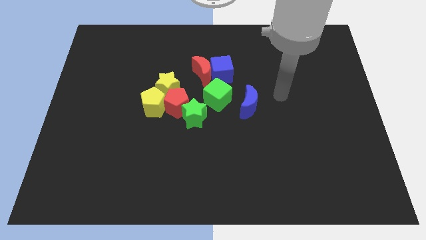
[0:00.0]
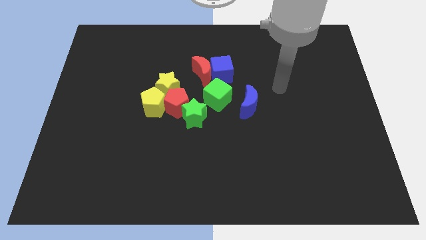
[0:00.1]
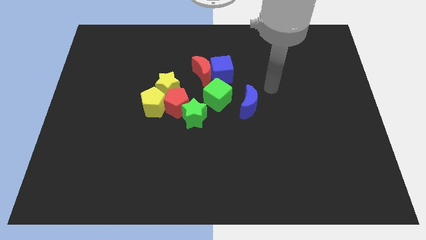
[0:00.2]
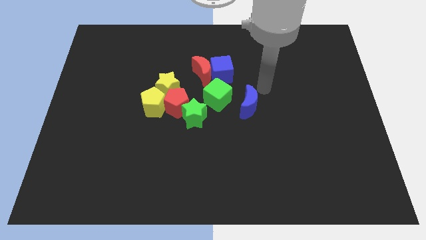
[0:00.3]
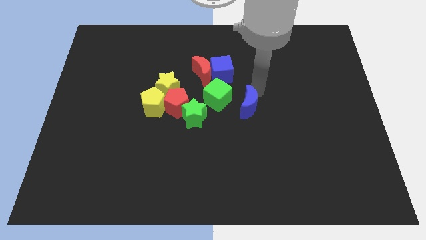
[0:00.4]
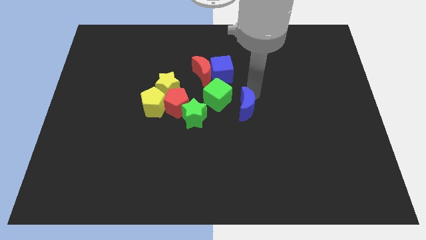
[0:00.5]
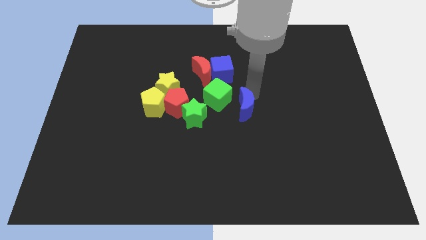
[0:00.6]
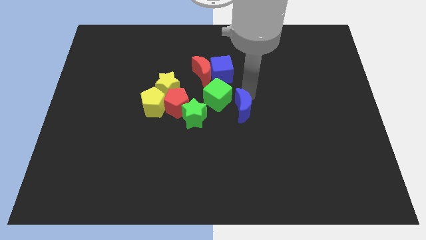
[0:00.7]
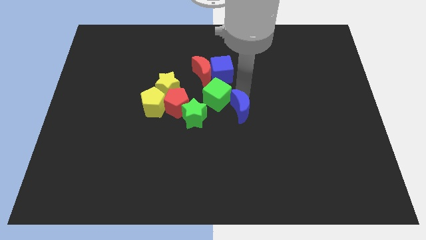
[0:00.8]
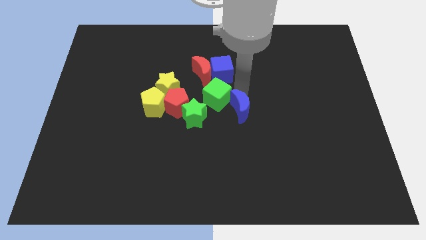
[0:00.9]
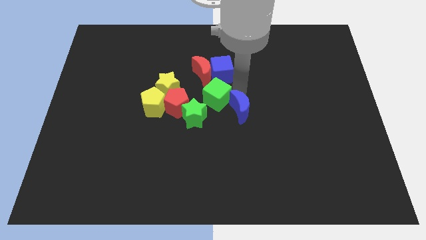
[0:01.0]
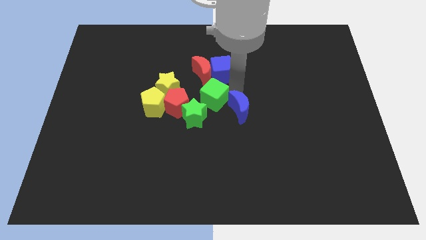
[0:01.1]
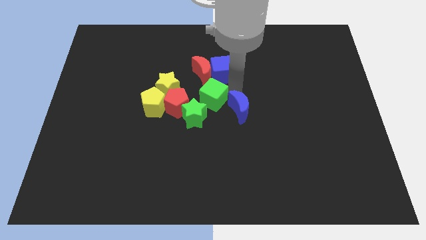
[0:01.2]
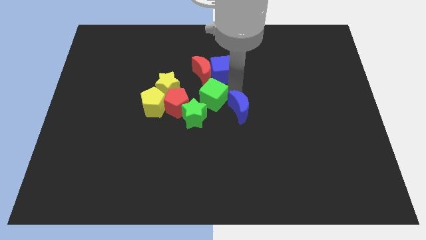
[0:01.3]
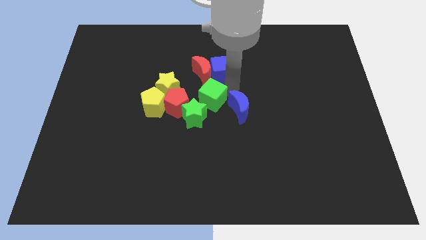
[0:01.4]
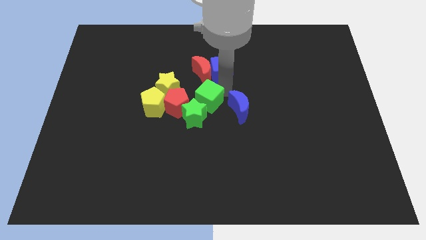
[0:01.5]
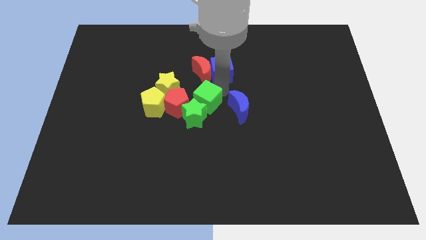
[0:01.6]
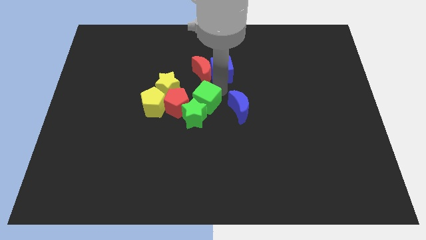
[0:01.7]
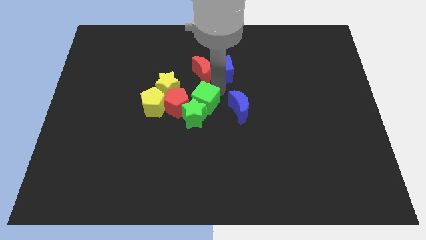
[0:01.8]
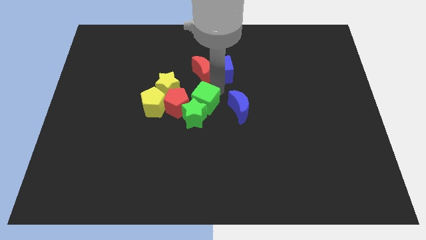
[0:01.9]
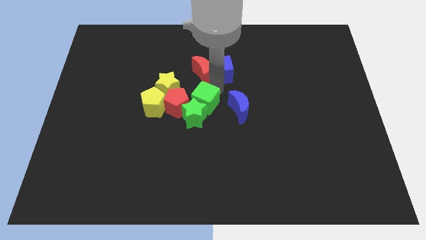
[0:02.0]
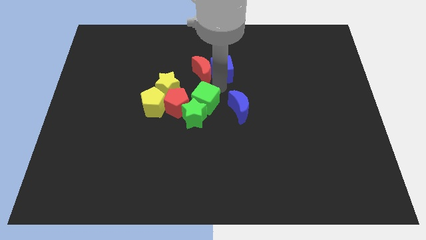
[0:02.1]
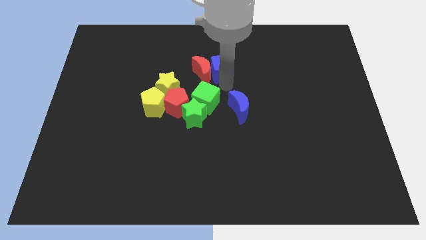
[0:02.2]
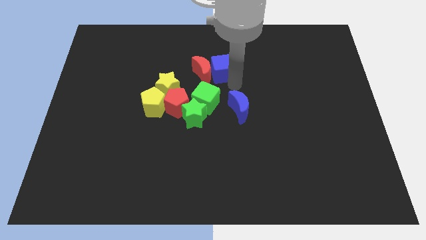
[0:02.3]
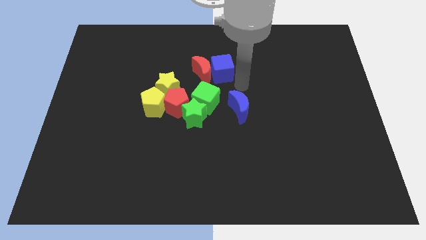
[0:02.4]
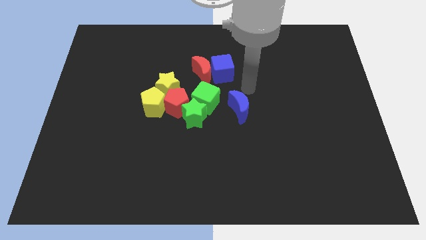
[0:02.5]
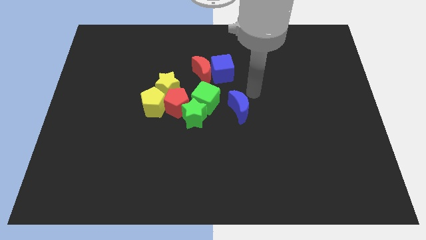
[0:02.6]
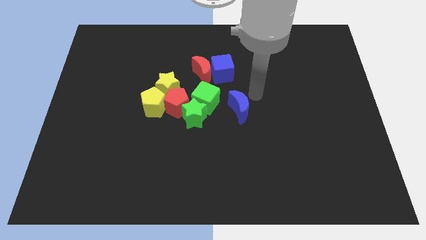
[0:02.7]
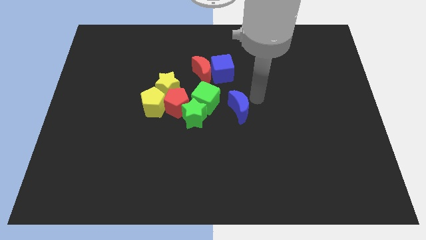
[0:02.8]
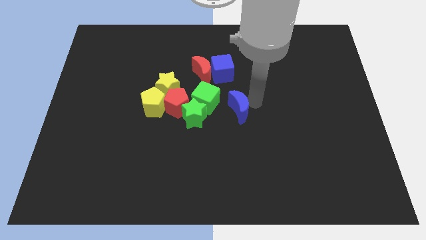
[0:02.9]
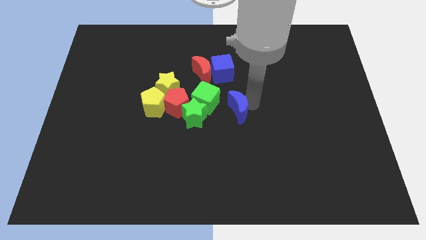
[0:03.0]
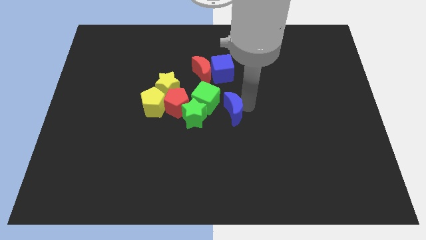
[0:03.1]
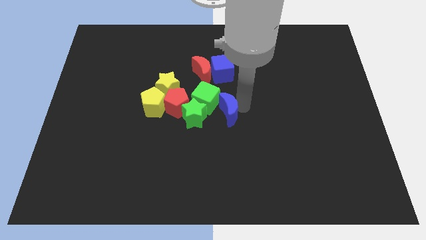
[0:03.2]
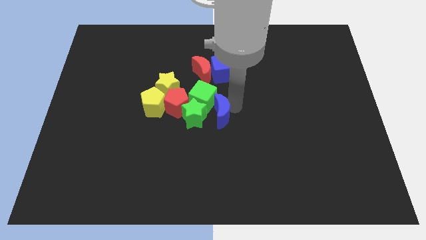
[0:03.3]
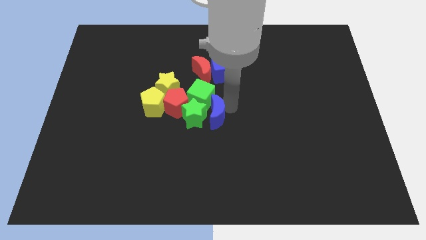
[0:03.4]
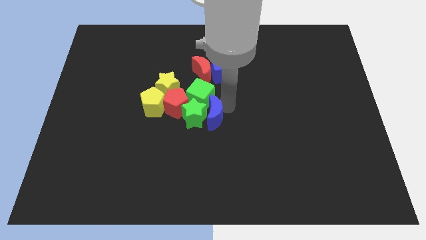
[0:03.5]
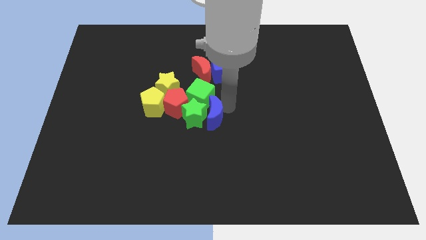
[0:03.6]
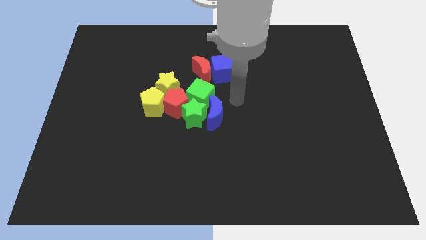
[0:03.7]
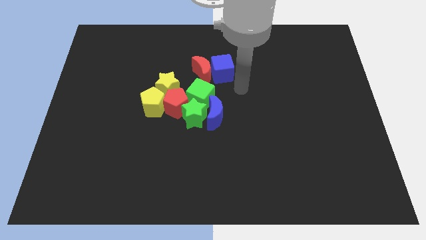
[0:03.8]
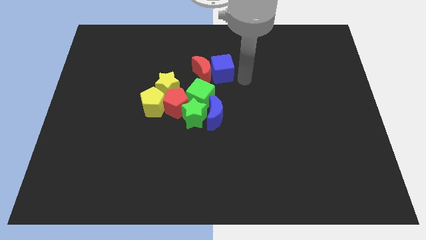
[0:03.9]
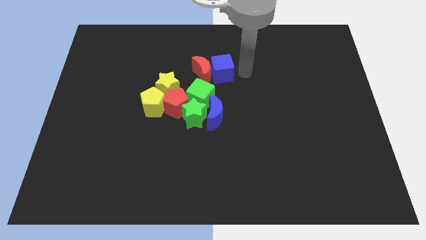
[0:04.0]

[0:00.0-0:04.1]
push the blue crescent and the green cube into the green star

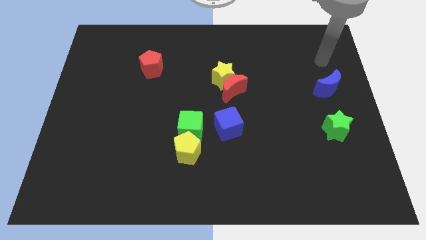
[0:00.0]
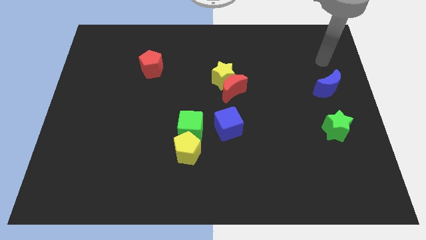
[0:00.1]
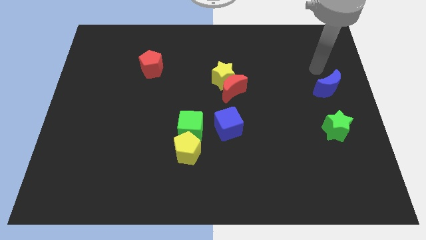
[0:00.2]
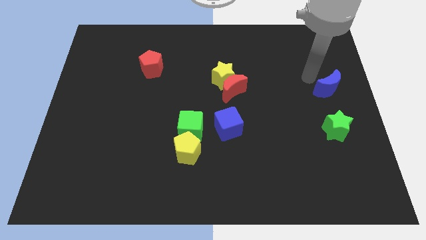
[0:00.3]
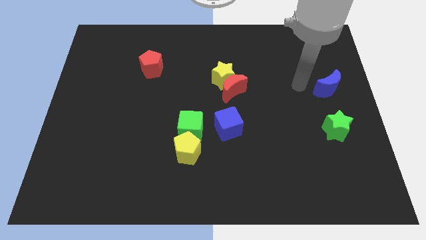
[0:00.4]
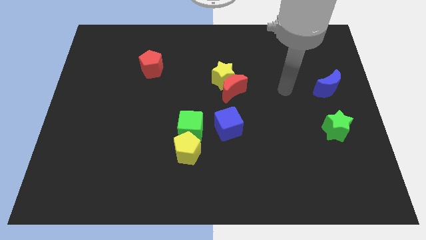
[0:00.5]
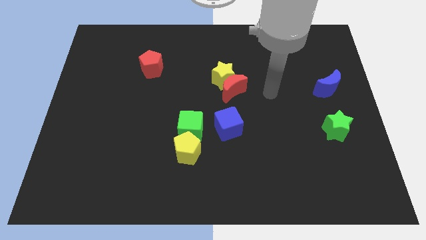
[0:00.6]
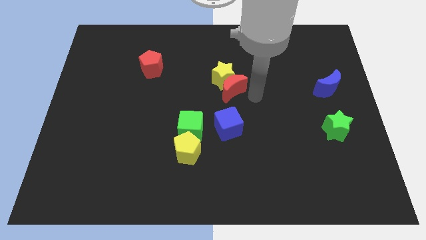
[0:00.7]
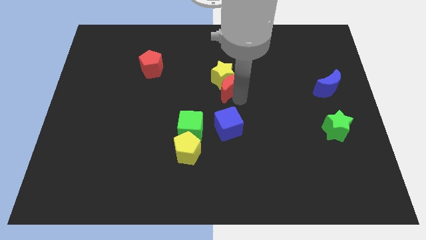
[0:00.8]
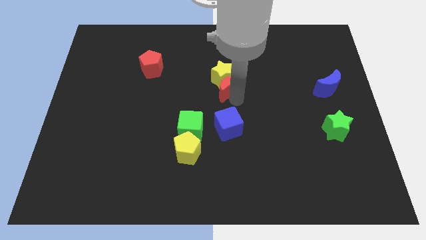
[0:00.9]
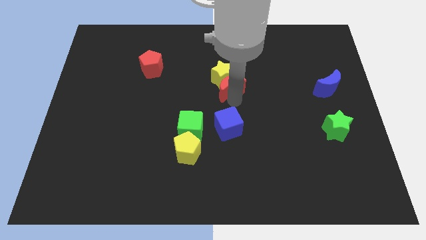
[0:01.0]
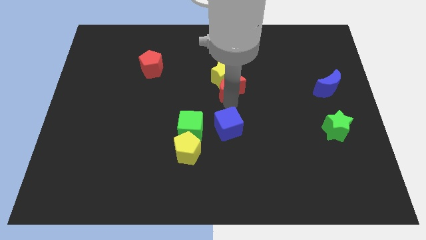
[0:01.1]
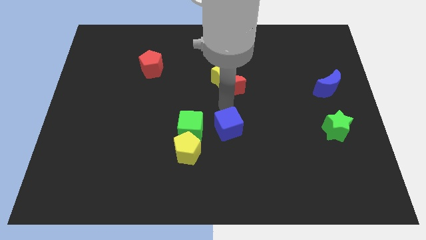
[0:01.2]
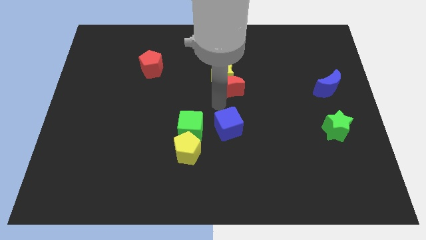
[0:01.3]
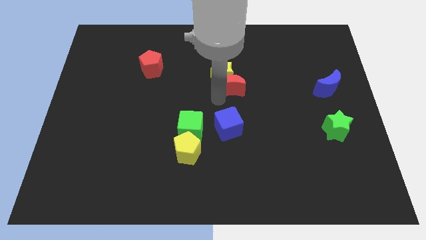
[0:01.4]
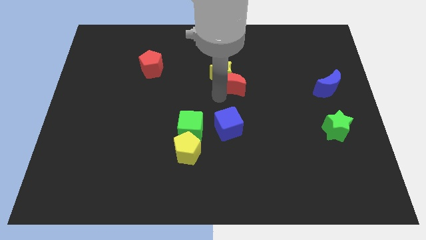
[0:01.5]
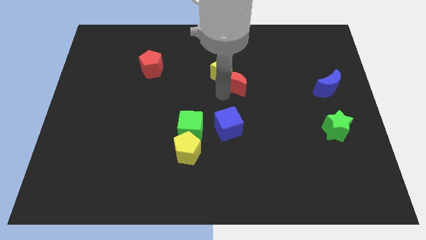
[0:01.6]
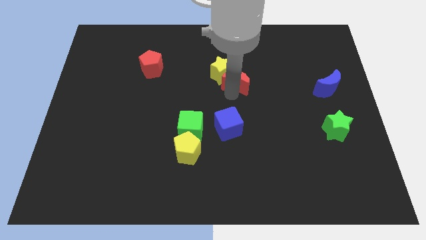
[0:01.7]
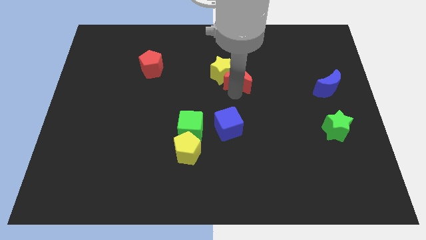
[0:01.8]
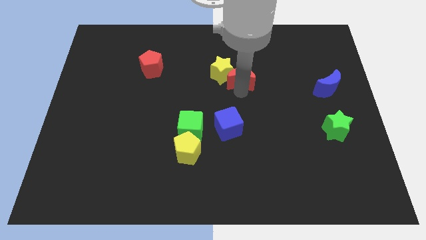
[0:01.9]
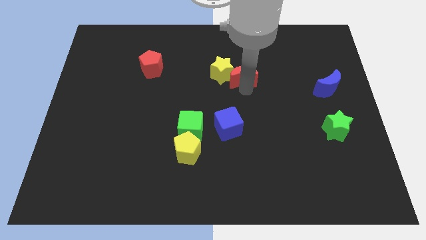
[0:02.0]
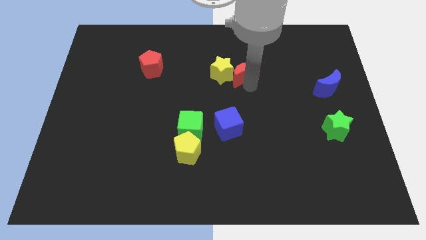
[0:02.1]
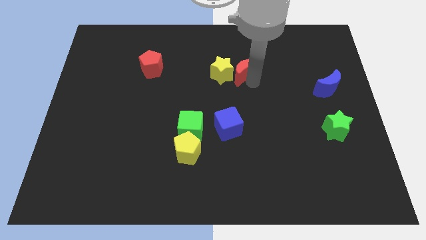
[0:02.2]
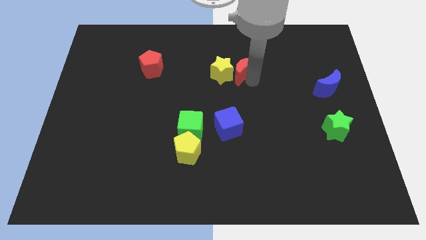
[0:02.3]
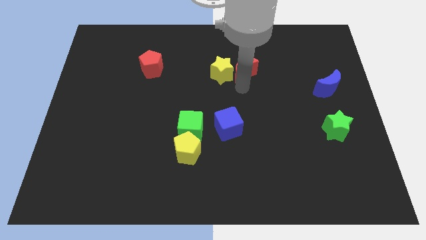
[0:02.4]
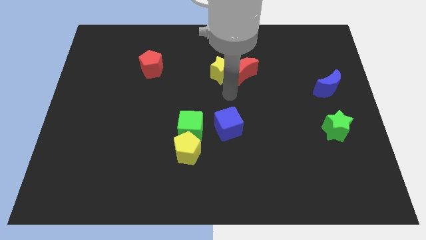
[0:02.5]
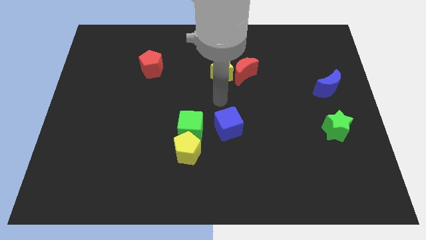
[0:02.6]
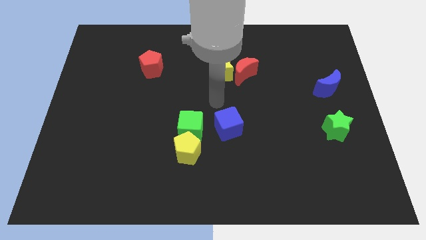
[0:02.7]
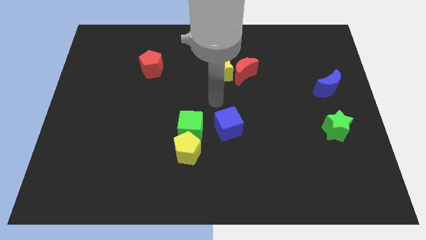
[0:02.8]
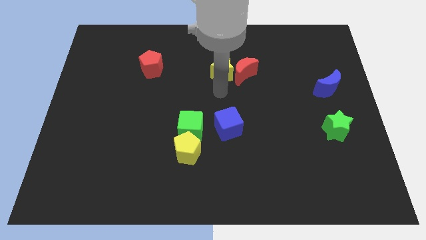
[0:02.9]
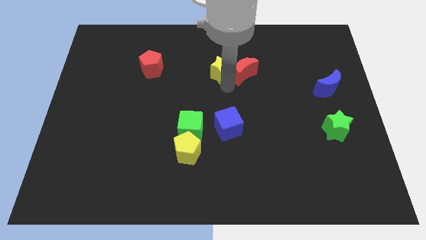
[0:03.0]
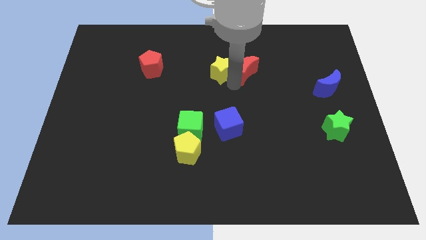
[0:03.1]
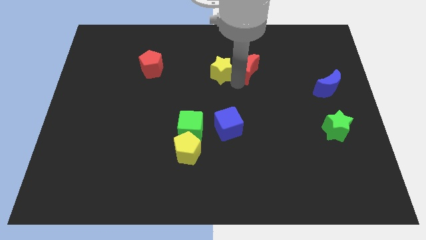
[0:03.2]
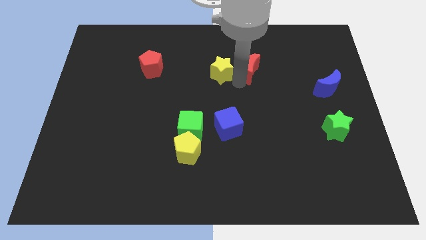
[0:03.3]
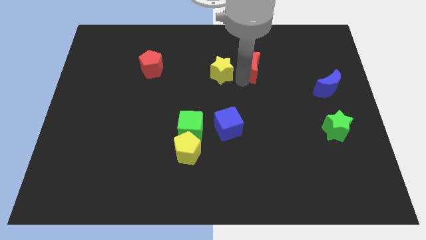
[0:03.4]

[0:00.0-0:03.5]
push the red crescent to the right of the yellow star

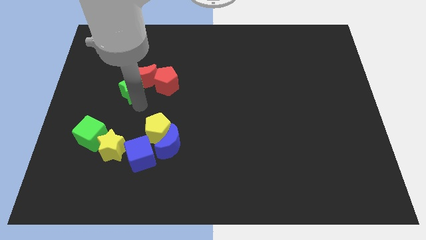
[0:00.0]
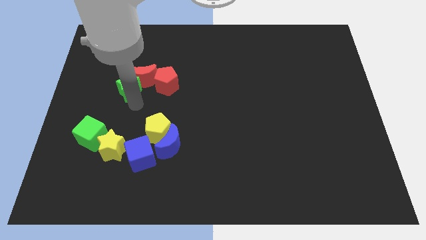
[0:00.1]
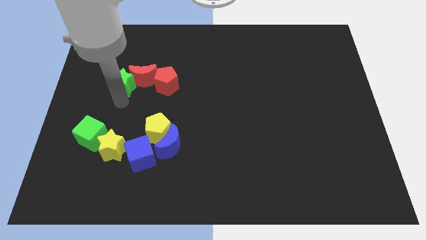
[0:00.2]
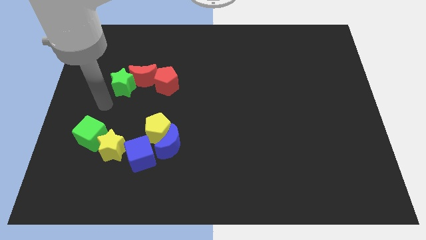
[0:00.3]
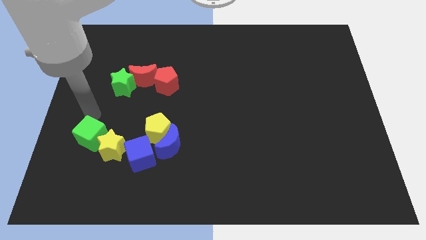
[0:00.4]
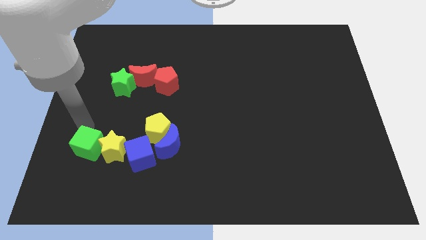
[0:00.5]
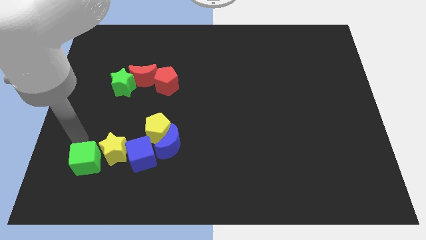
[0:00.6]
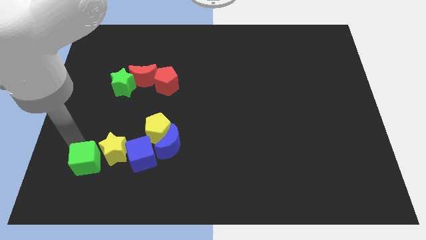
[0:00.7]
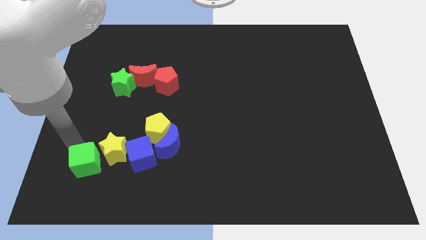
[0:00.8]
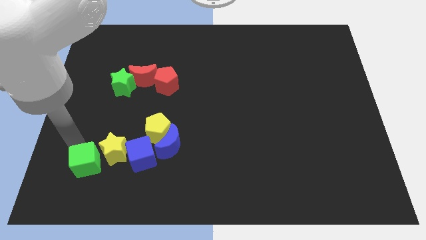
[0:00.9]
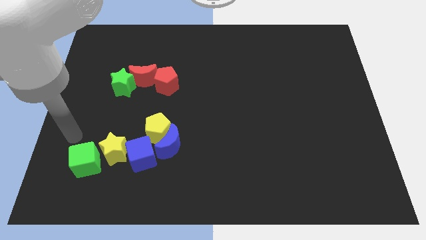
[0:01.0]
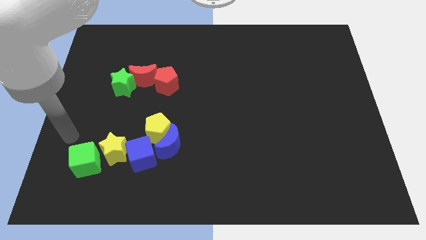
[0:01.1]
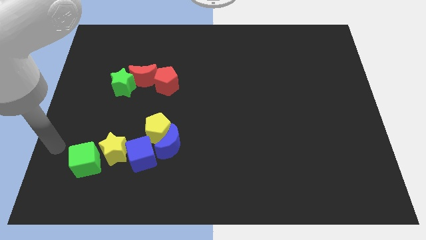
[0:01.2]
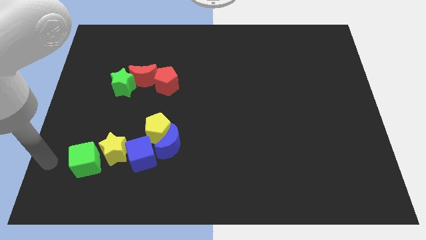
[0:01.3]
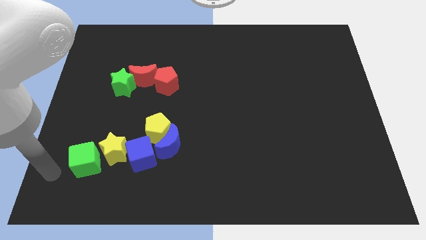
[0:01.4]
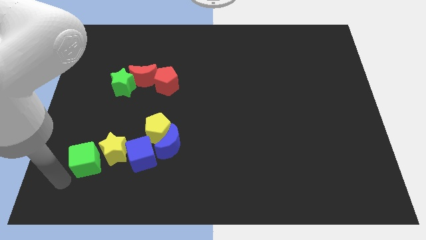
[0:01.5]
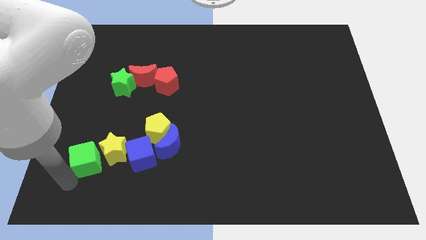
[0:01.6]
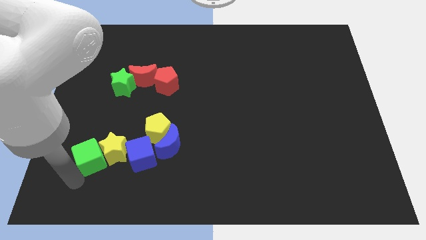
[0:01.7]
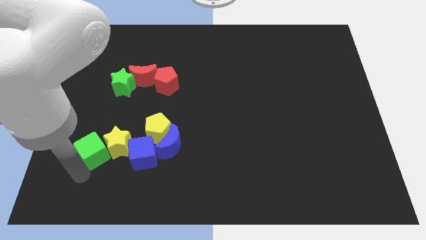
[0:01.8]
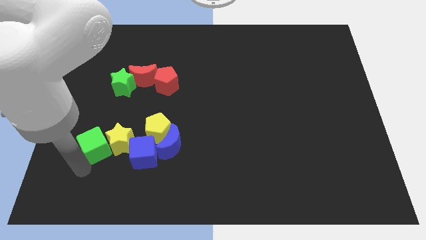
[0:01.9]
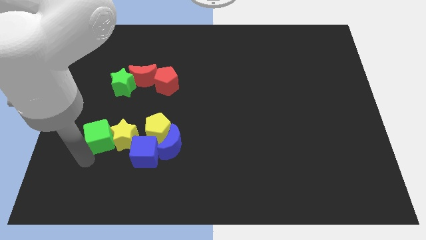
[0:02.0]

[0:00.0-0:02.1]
push the green cube to the left side of the yellow star
